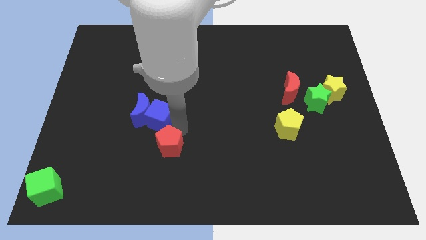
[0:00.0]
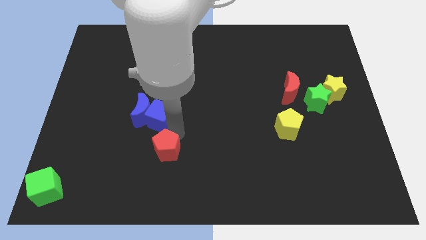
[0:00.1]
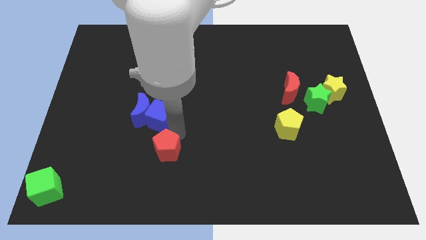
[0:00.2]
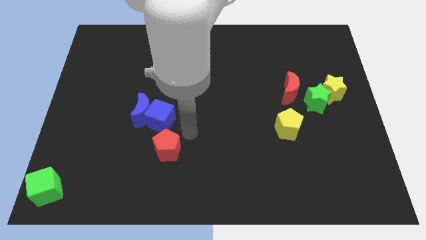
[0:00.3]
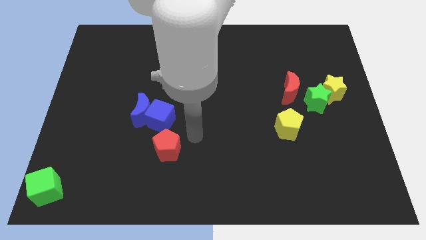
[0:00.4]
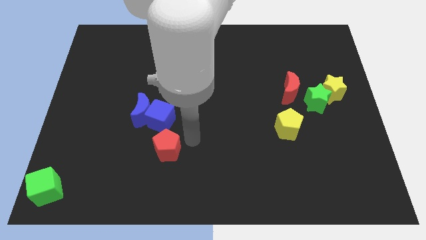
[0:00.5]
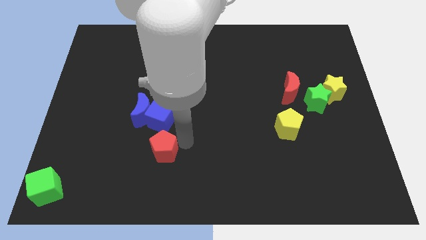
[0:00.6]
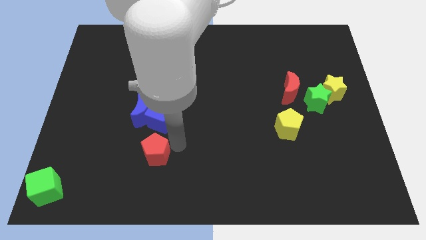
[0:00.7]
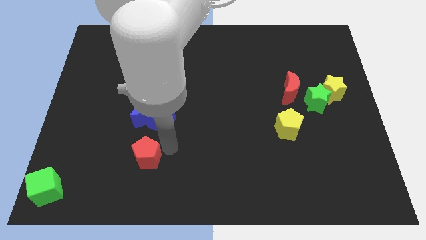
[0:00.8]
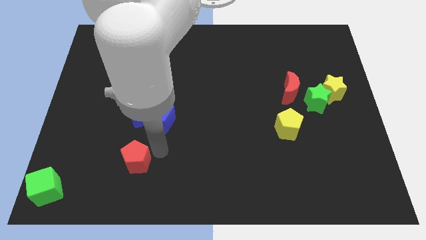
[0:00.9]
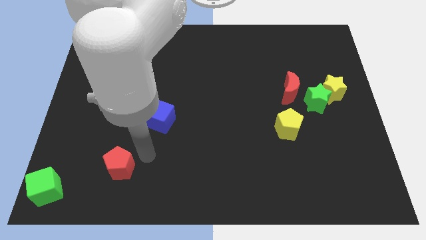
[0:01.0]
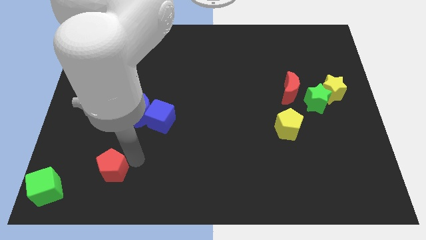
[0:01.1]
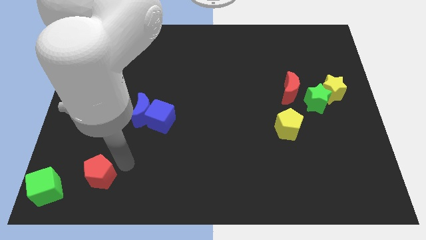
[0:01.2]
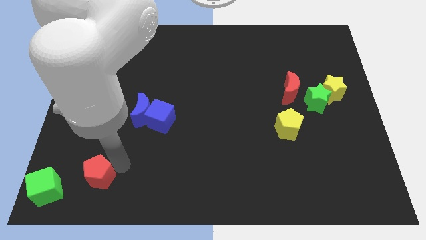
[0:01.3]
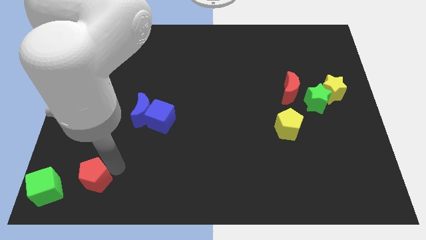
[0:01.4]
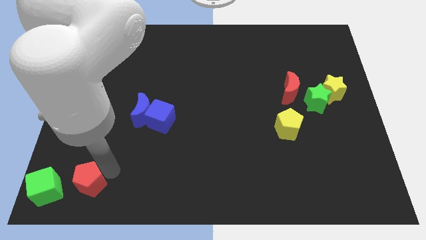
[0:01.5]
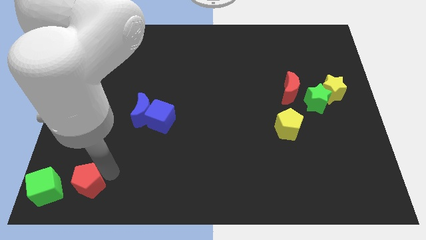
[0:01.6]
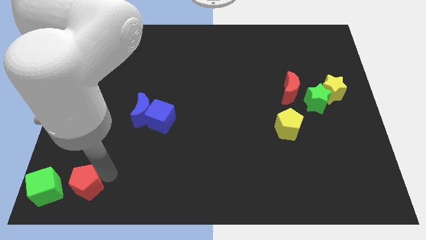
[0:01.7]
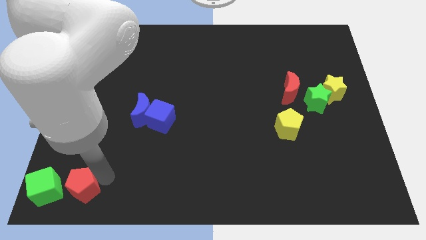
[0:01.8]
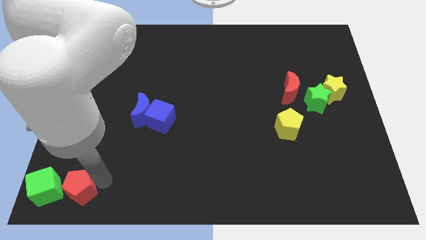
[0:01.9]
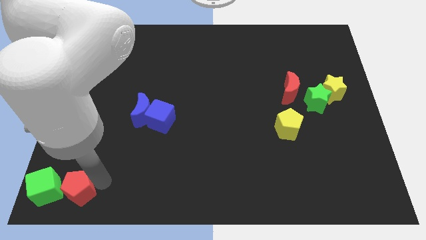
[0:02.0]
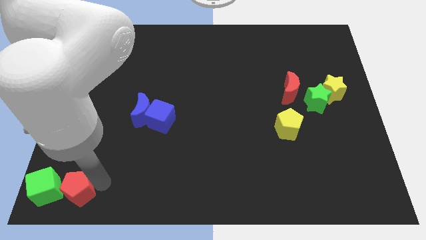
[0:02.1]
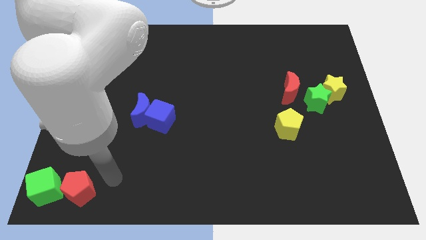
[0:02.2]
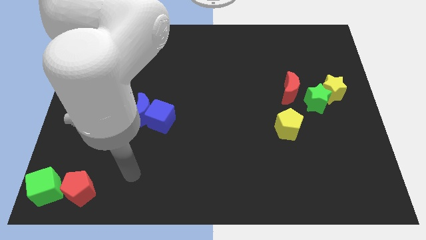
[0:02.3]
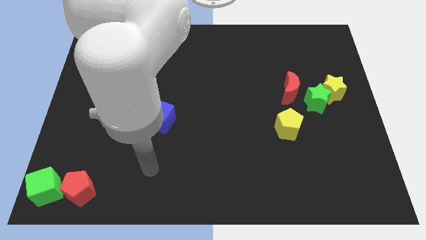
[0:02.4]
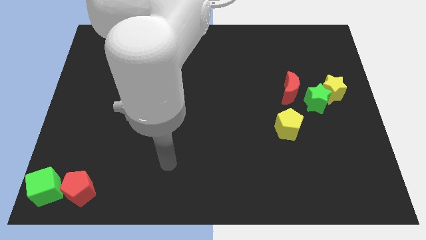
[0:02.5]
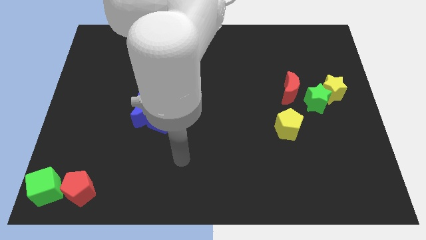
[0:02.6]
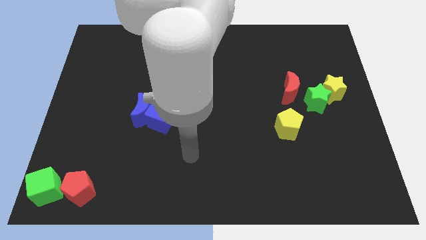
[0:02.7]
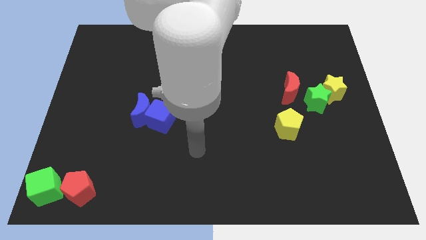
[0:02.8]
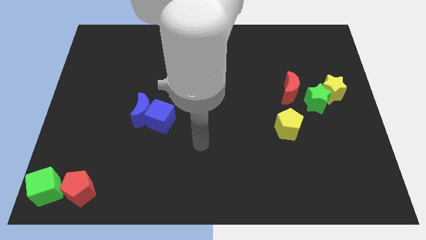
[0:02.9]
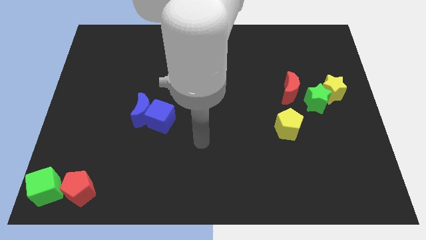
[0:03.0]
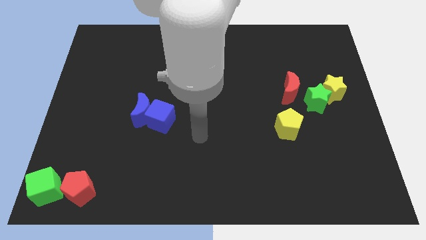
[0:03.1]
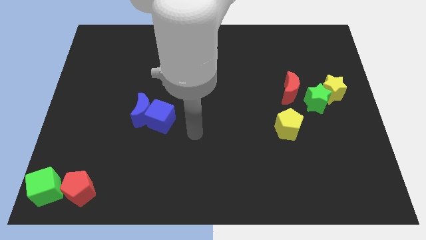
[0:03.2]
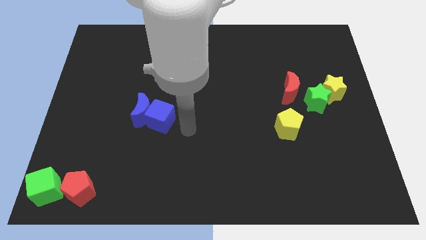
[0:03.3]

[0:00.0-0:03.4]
move red pentagon to the right of the green cube

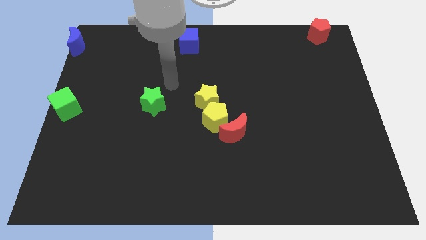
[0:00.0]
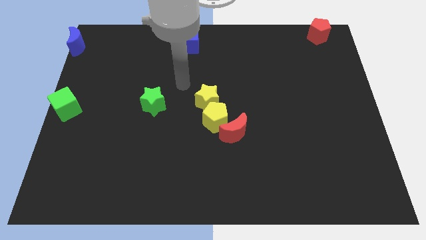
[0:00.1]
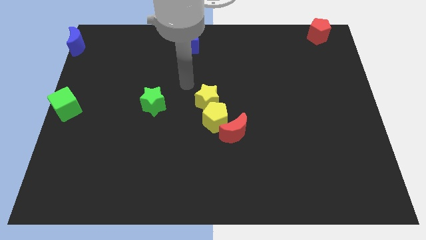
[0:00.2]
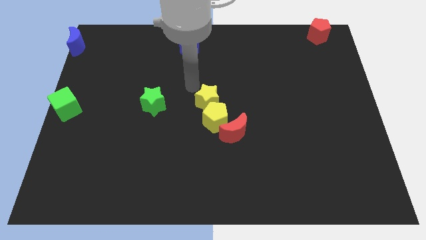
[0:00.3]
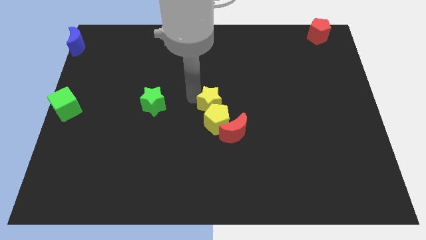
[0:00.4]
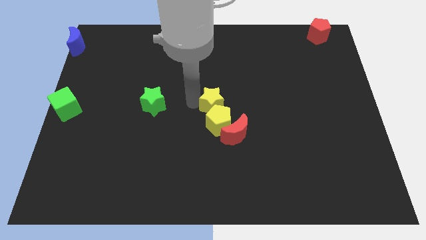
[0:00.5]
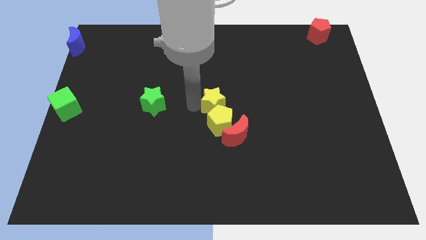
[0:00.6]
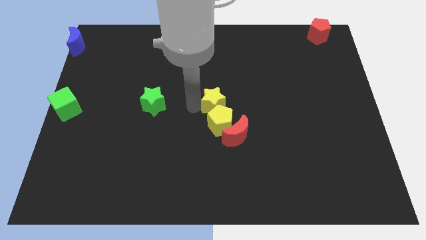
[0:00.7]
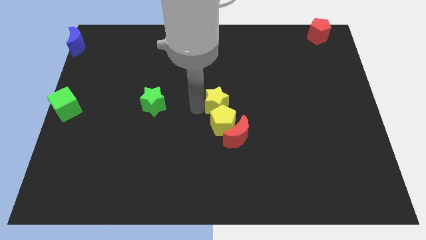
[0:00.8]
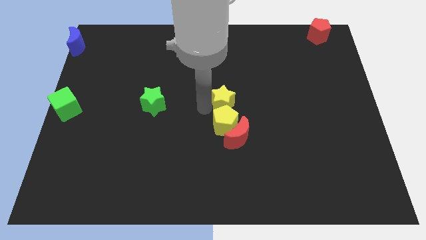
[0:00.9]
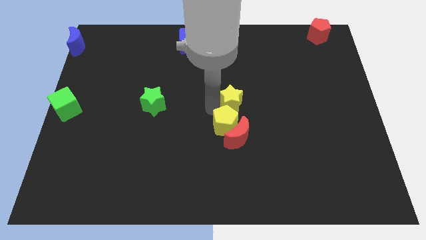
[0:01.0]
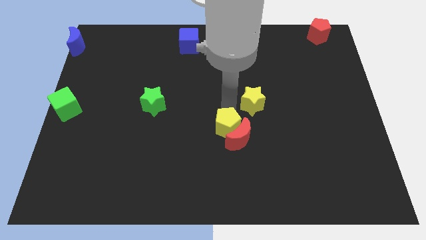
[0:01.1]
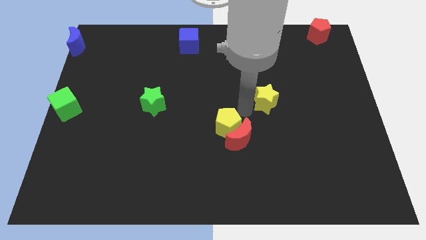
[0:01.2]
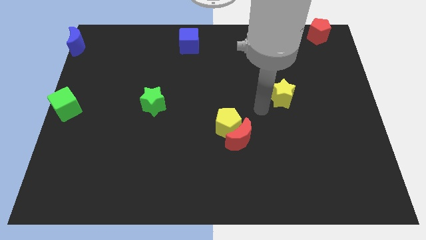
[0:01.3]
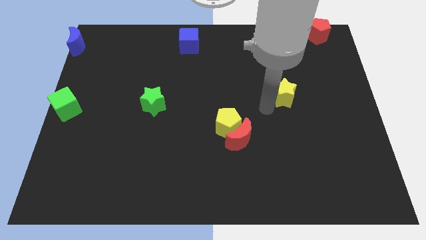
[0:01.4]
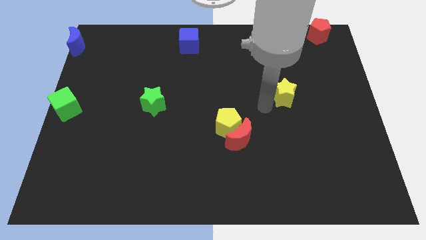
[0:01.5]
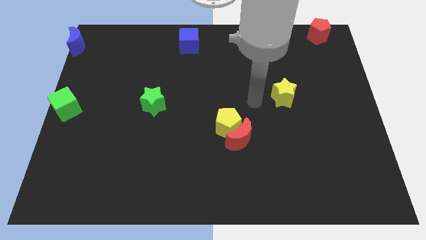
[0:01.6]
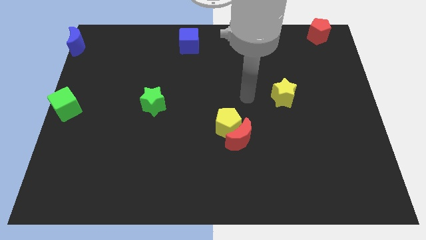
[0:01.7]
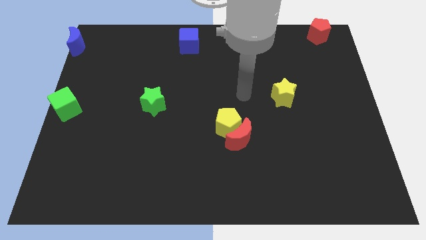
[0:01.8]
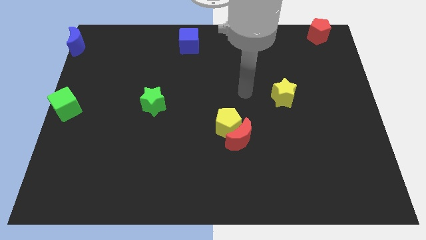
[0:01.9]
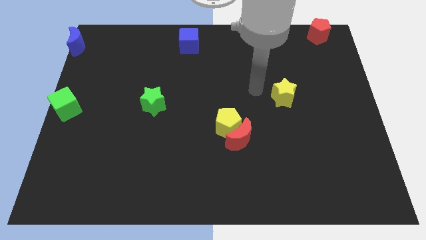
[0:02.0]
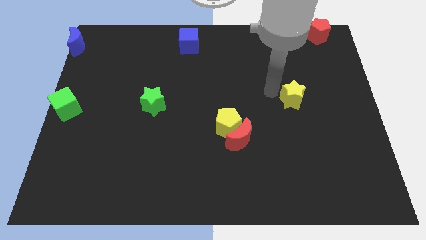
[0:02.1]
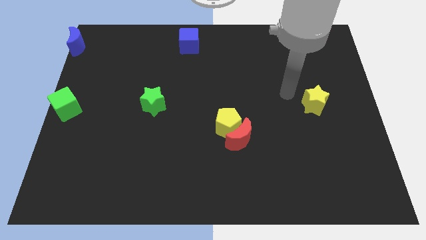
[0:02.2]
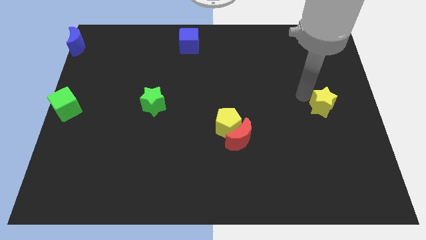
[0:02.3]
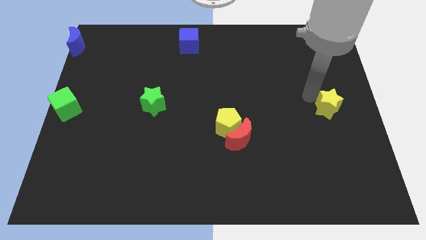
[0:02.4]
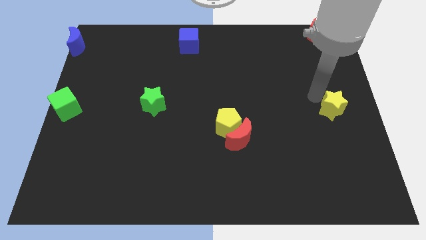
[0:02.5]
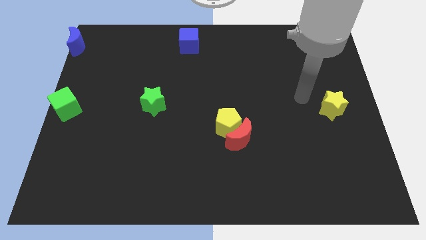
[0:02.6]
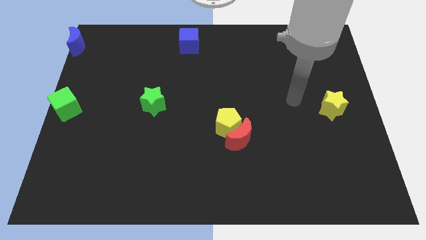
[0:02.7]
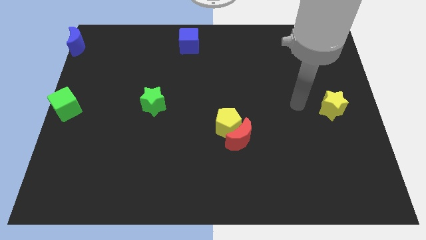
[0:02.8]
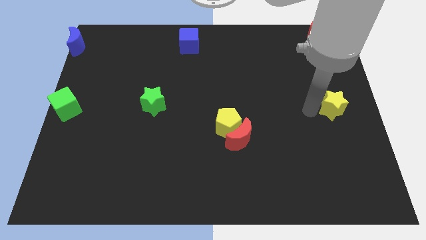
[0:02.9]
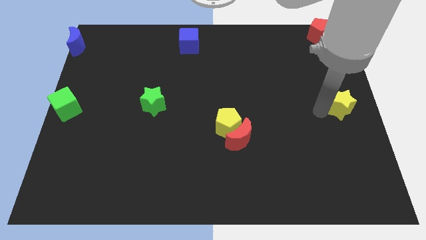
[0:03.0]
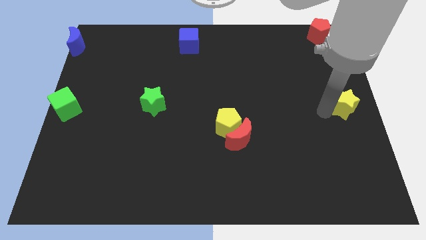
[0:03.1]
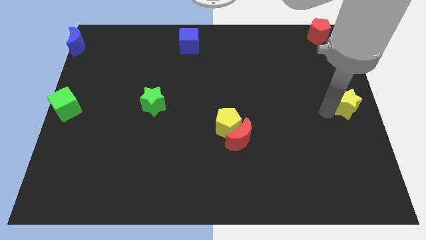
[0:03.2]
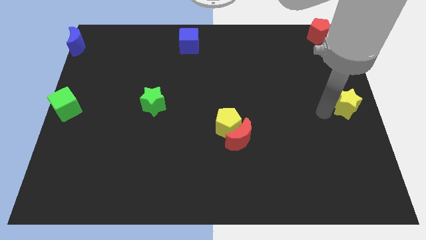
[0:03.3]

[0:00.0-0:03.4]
move the yellow star to the center right of the board

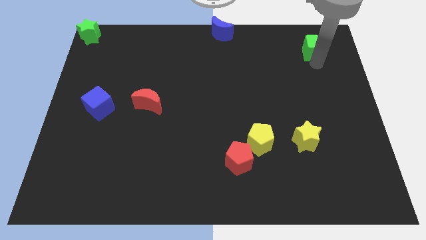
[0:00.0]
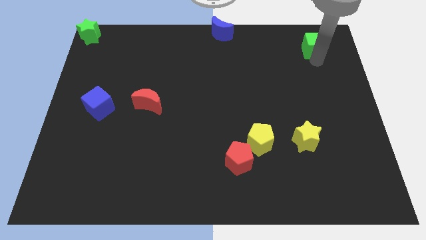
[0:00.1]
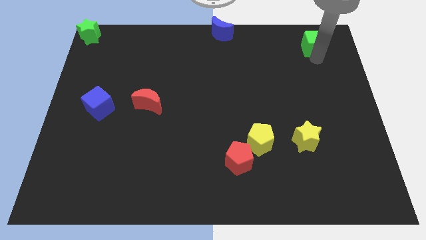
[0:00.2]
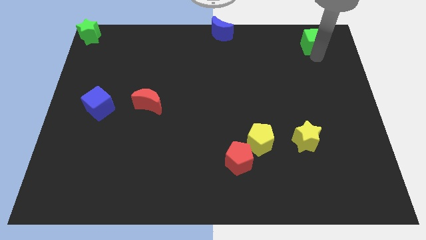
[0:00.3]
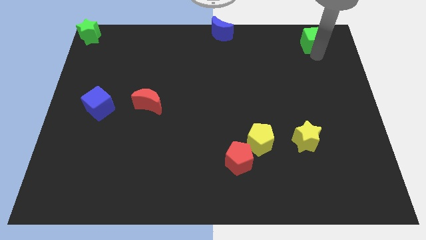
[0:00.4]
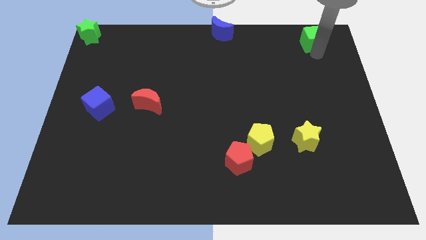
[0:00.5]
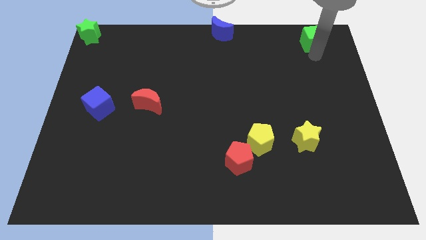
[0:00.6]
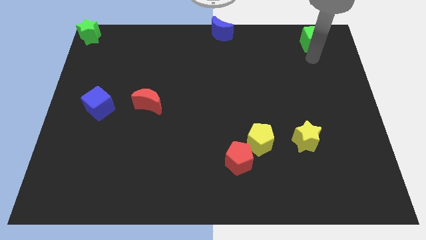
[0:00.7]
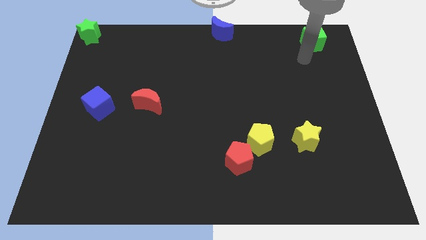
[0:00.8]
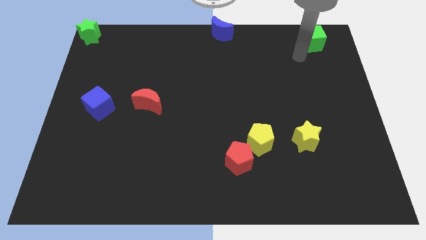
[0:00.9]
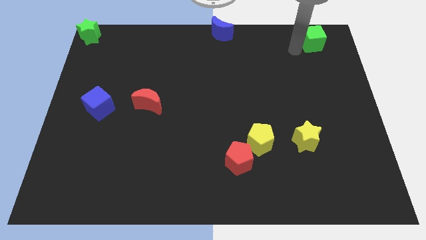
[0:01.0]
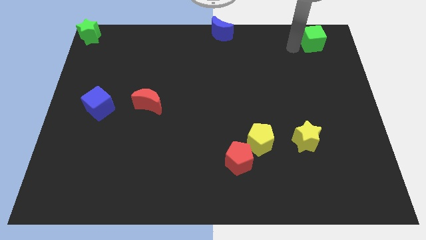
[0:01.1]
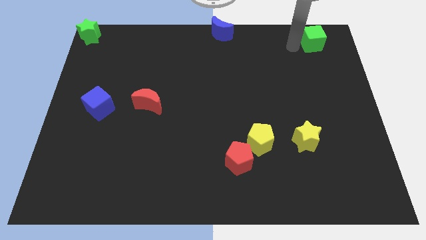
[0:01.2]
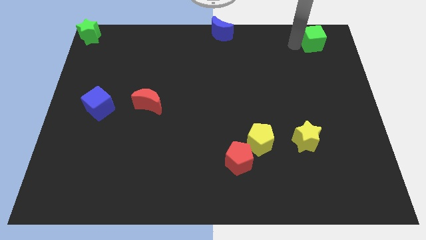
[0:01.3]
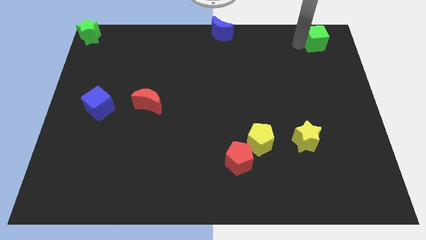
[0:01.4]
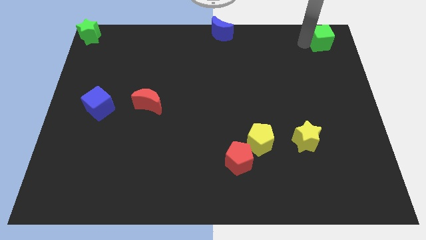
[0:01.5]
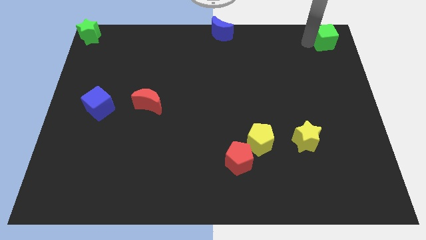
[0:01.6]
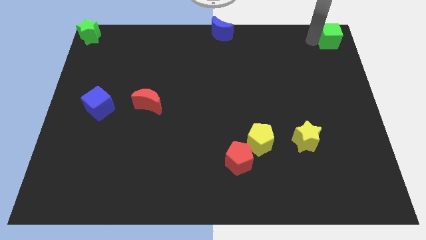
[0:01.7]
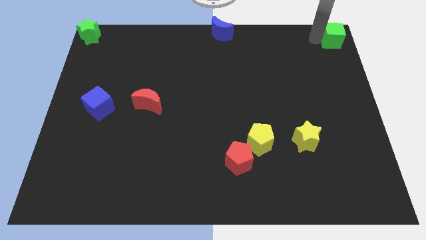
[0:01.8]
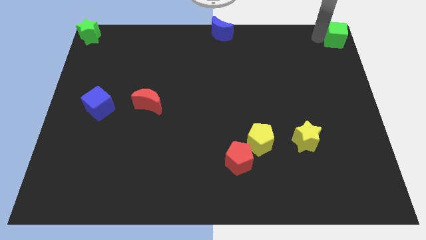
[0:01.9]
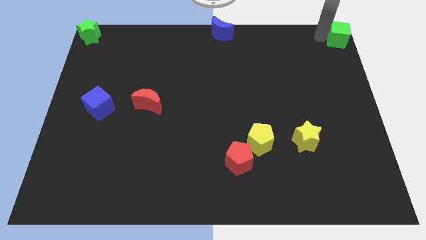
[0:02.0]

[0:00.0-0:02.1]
move green cube to the top right
